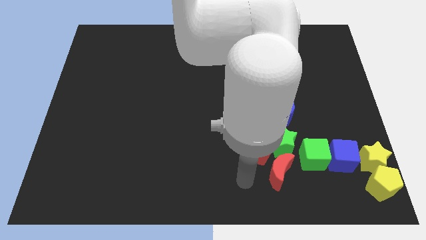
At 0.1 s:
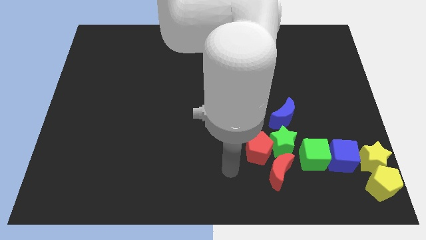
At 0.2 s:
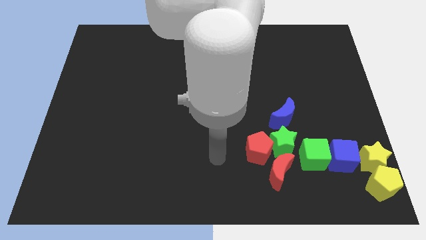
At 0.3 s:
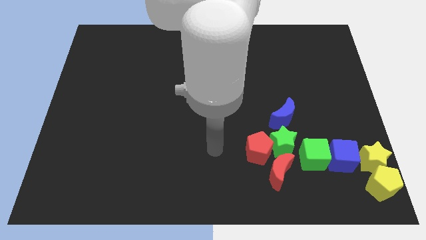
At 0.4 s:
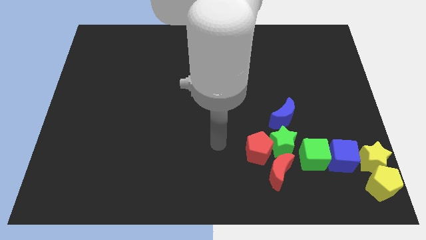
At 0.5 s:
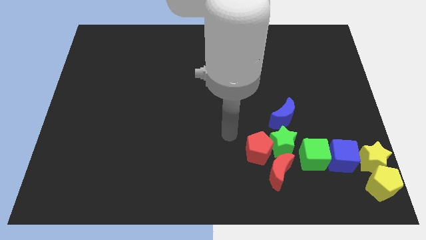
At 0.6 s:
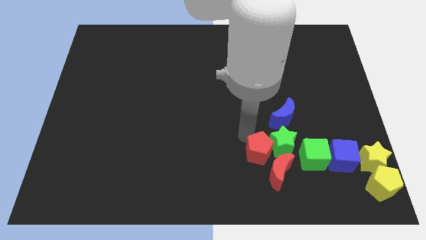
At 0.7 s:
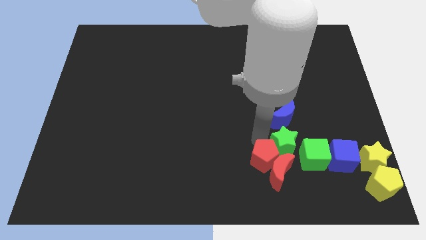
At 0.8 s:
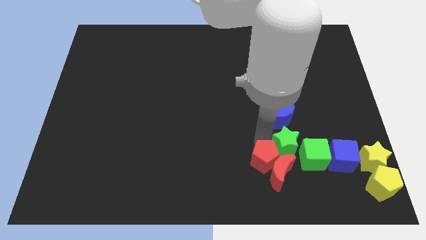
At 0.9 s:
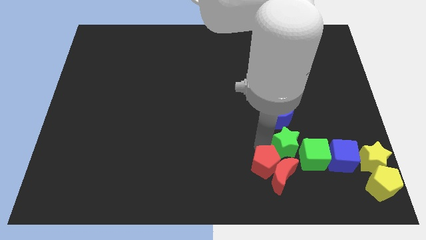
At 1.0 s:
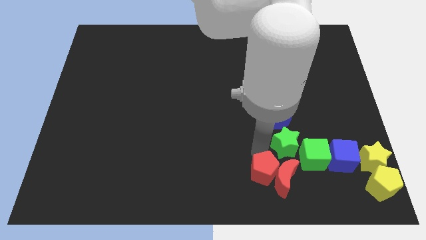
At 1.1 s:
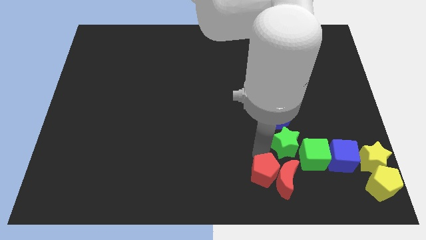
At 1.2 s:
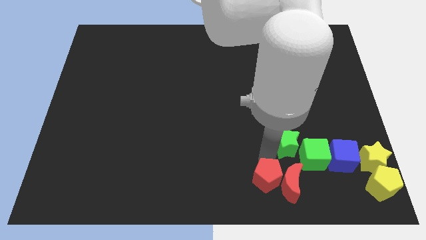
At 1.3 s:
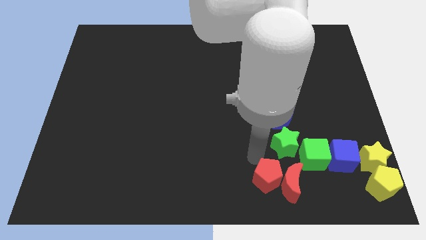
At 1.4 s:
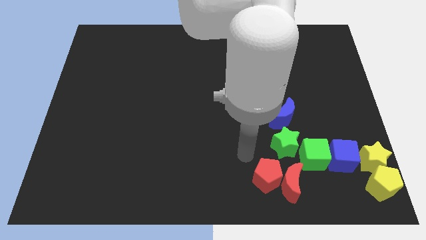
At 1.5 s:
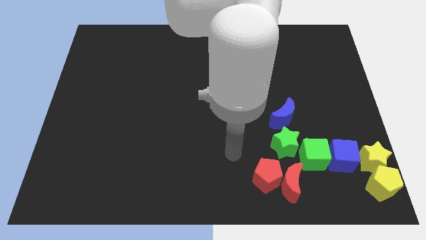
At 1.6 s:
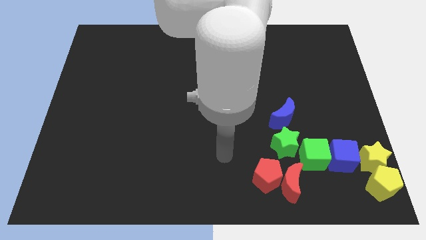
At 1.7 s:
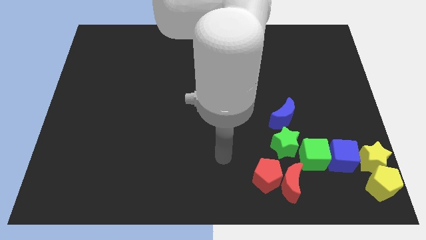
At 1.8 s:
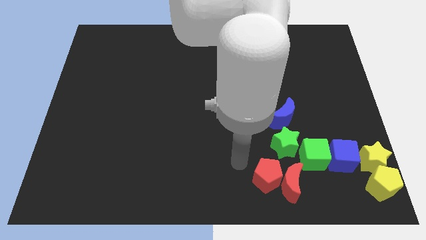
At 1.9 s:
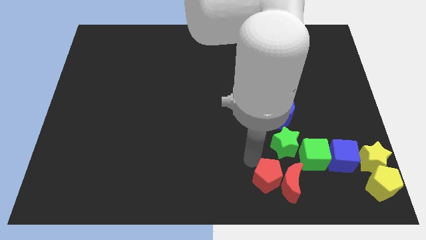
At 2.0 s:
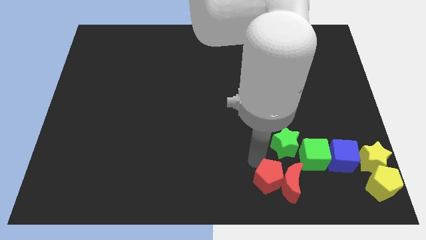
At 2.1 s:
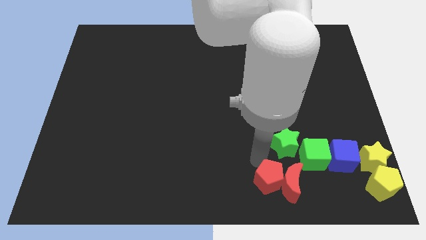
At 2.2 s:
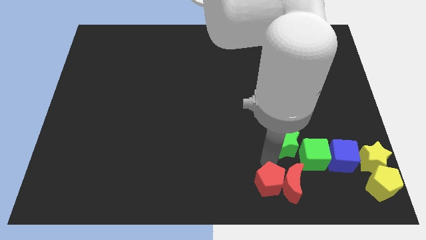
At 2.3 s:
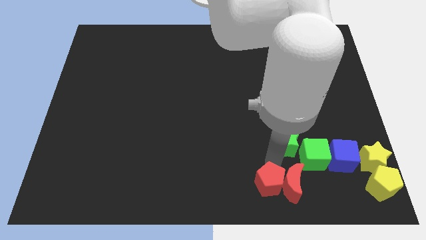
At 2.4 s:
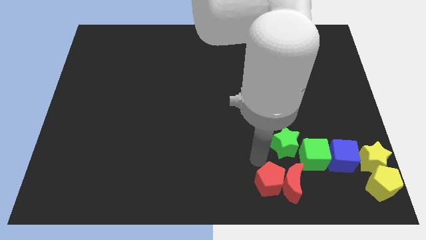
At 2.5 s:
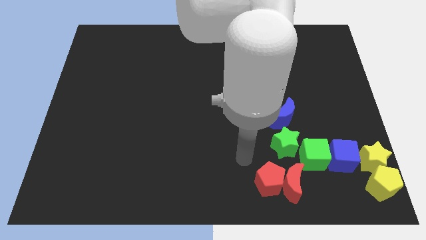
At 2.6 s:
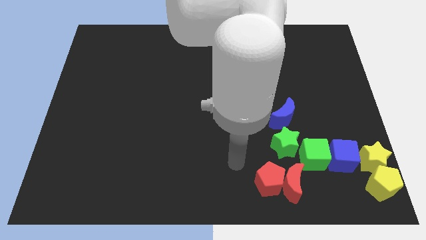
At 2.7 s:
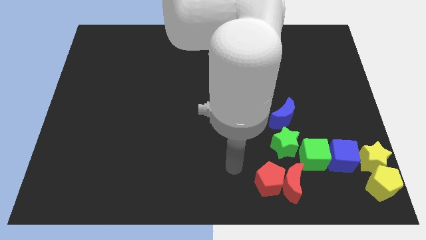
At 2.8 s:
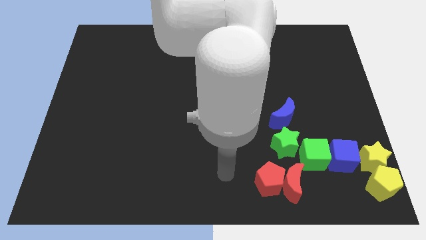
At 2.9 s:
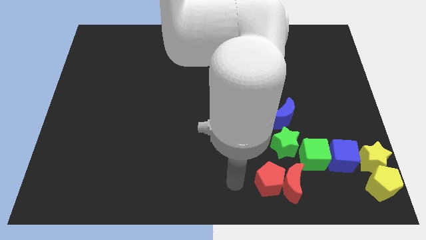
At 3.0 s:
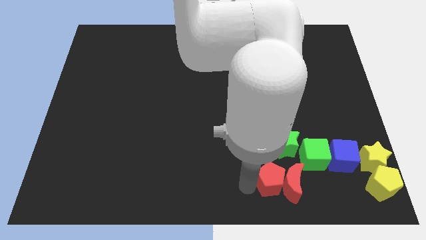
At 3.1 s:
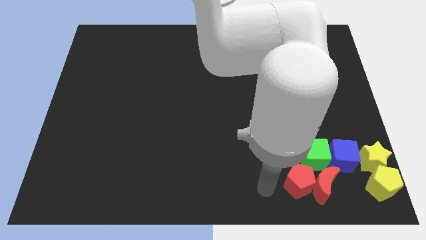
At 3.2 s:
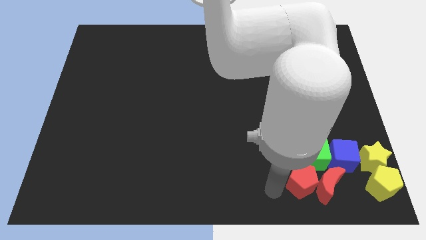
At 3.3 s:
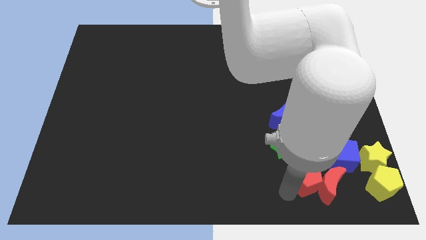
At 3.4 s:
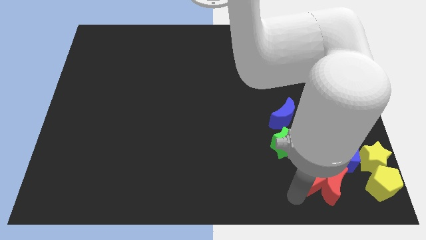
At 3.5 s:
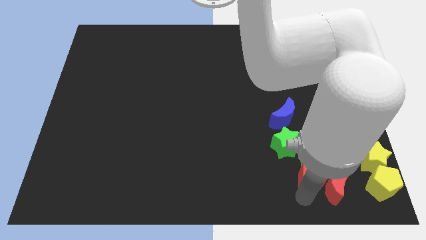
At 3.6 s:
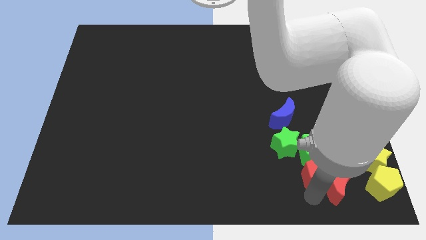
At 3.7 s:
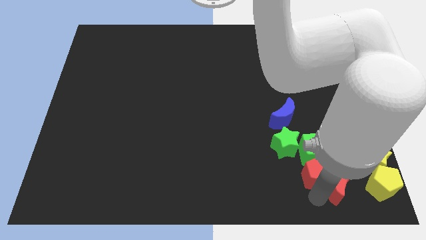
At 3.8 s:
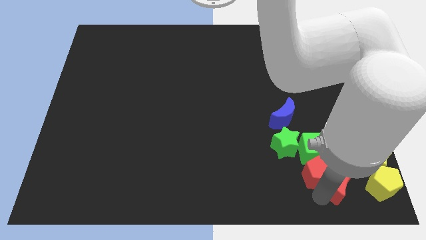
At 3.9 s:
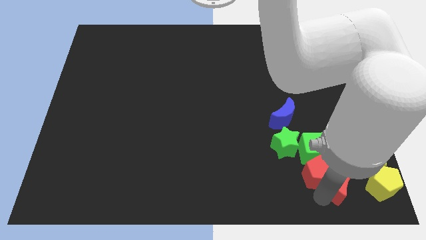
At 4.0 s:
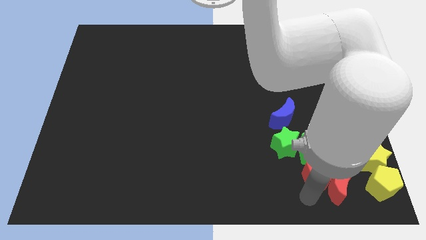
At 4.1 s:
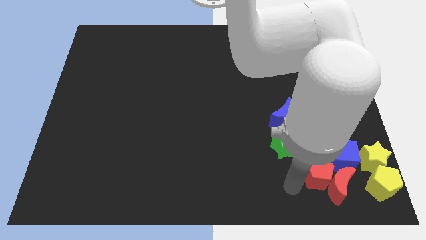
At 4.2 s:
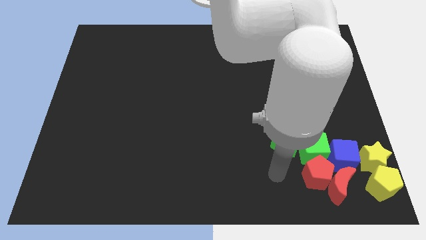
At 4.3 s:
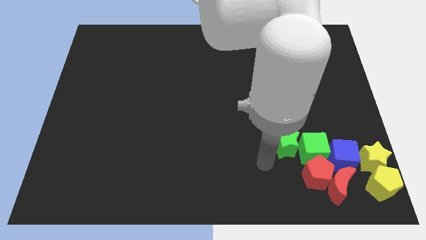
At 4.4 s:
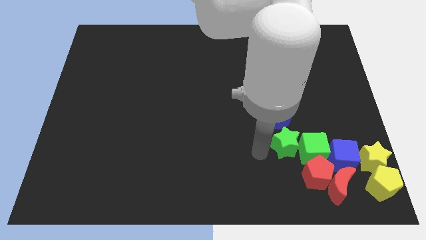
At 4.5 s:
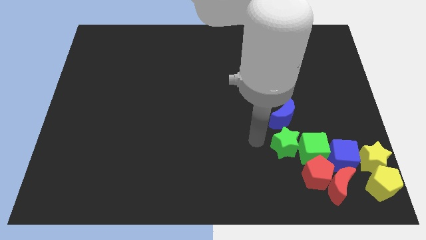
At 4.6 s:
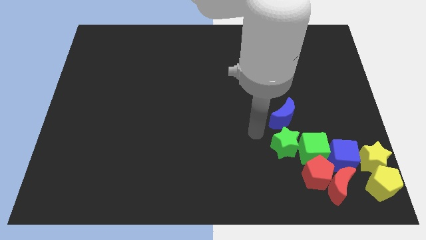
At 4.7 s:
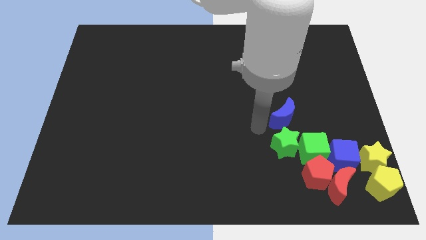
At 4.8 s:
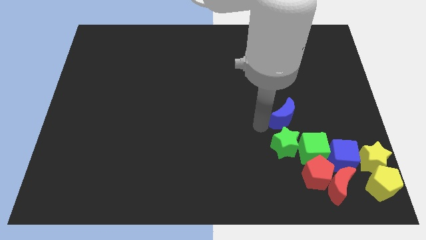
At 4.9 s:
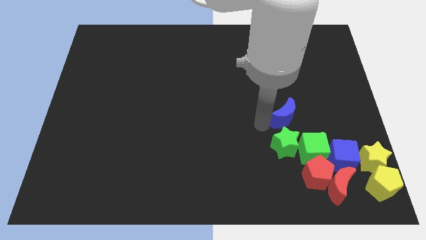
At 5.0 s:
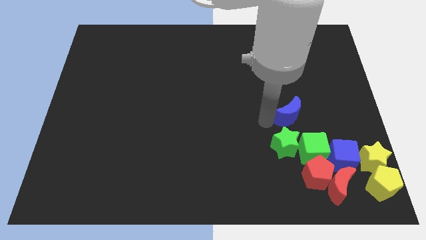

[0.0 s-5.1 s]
push the red pentagon to the bottom of the green cube along with the red crescent

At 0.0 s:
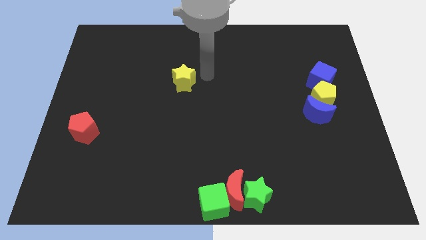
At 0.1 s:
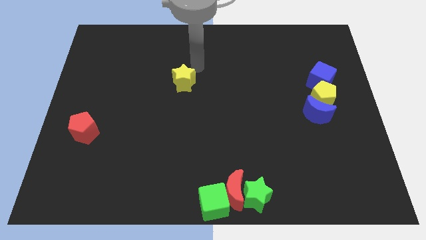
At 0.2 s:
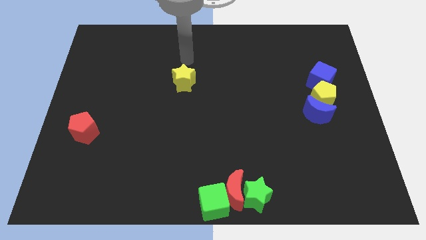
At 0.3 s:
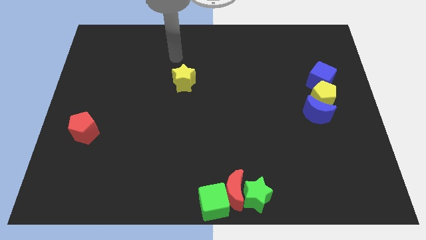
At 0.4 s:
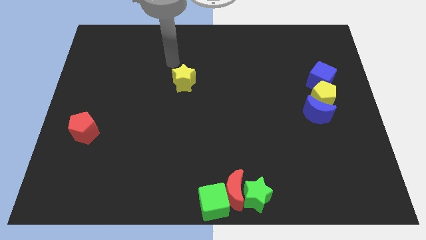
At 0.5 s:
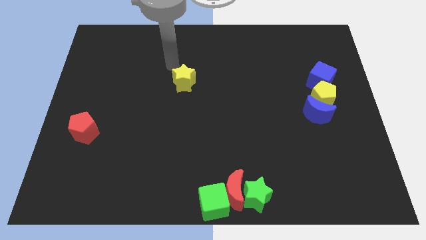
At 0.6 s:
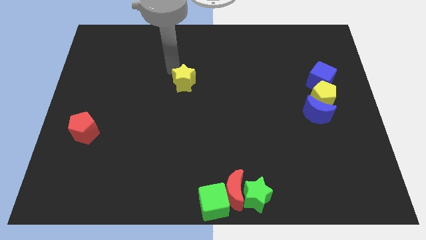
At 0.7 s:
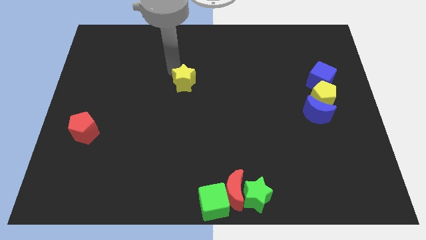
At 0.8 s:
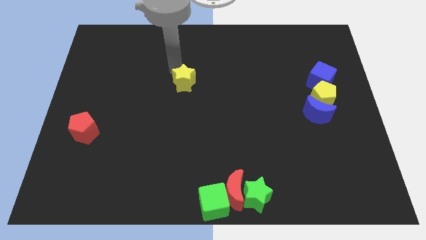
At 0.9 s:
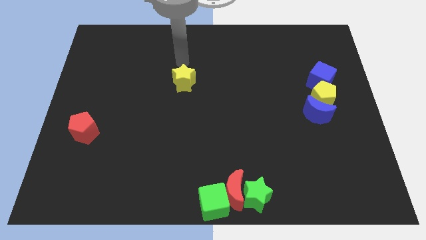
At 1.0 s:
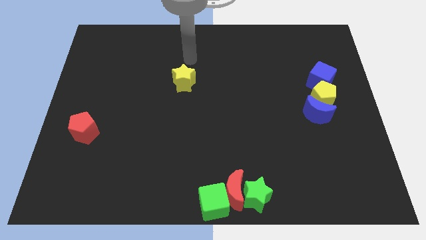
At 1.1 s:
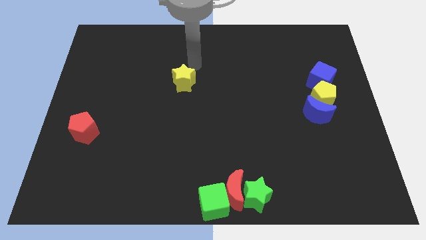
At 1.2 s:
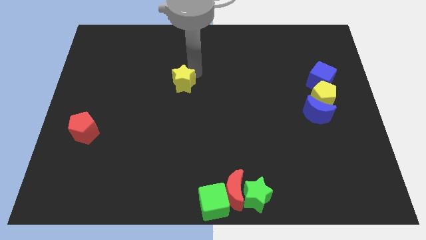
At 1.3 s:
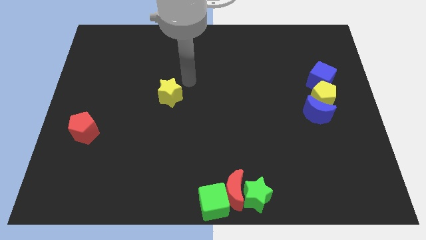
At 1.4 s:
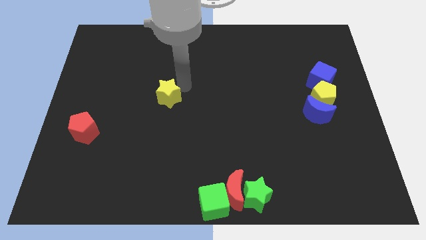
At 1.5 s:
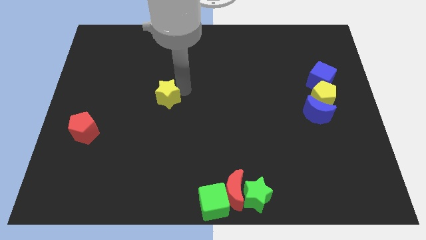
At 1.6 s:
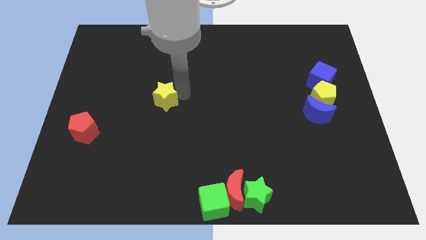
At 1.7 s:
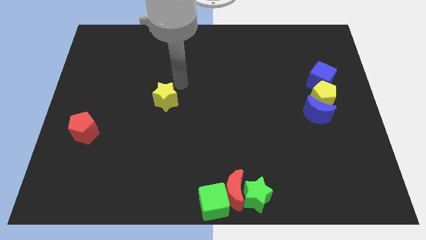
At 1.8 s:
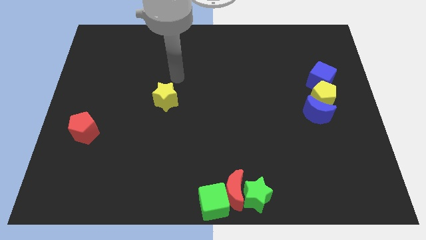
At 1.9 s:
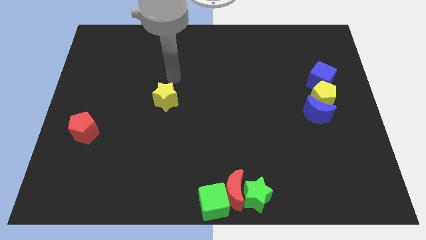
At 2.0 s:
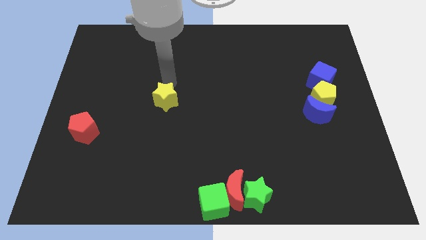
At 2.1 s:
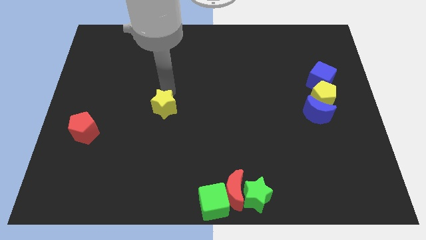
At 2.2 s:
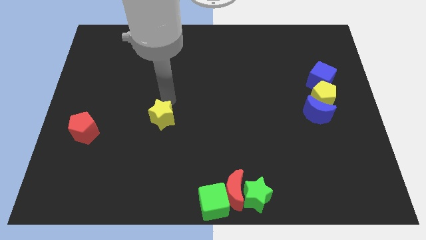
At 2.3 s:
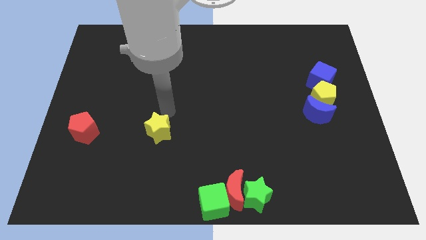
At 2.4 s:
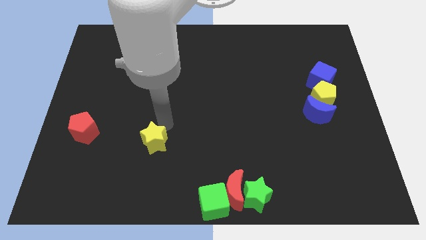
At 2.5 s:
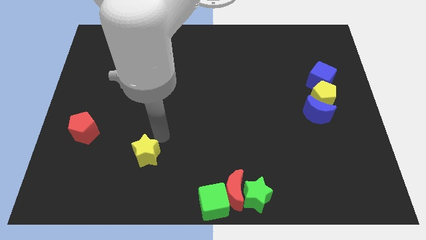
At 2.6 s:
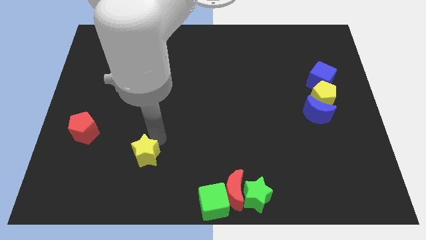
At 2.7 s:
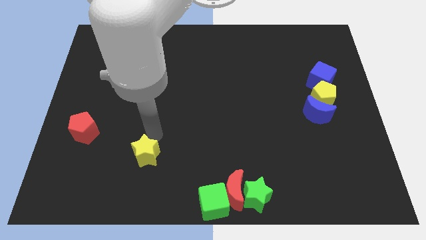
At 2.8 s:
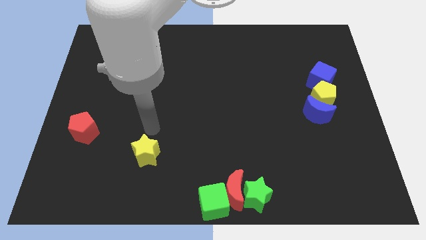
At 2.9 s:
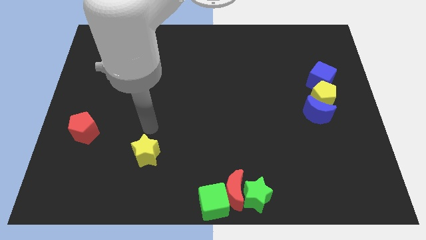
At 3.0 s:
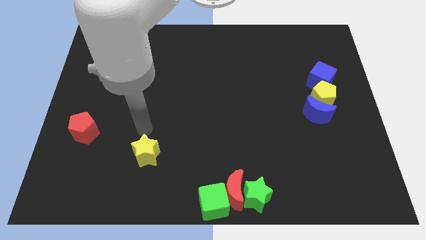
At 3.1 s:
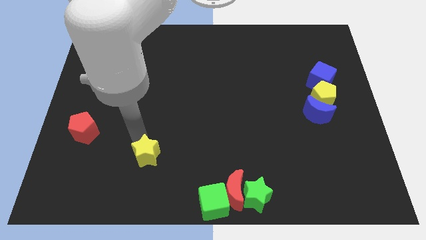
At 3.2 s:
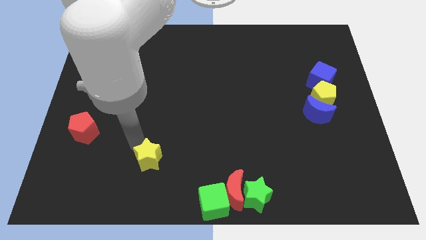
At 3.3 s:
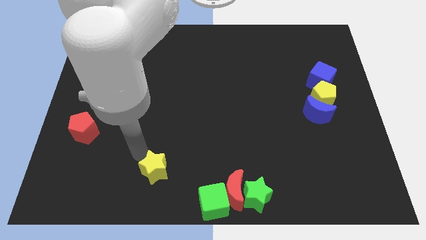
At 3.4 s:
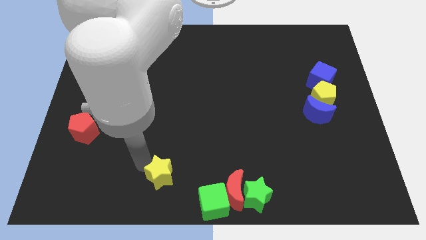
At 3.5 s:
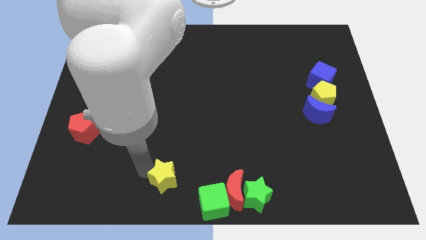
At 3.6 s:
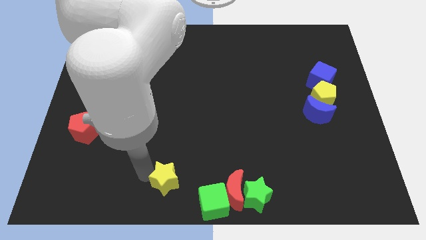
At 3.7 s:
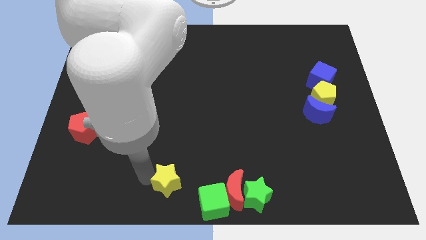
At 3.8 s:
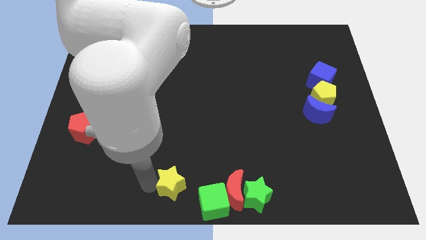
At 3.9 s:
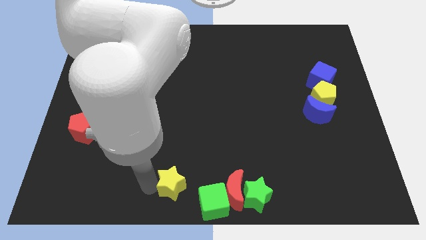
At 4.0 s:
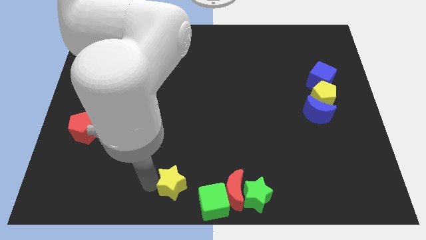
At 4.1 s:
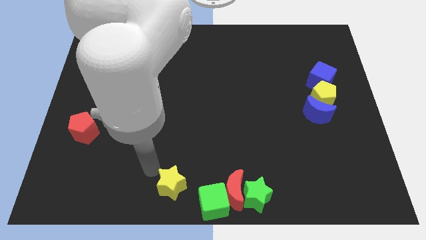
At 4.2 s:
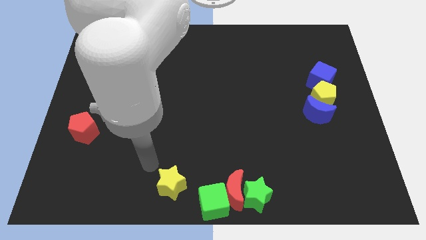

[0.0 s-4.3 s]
move the yellow star diagonally bottom right to the red pentagon
